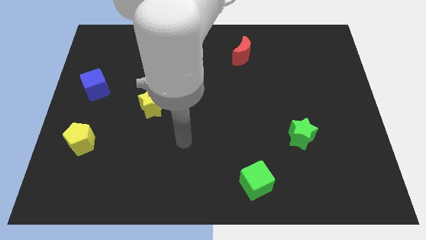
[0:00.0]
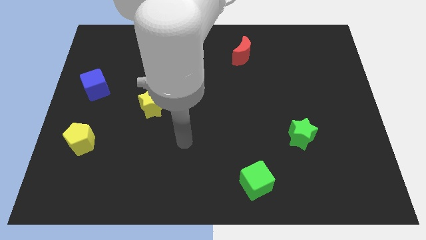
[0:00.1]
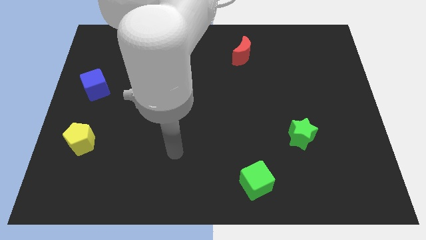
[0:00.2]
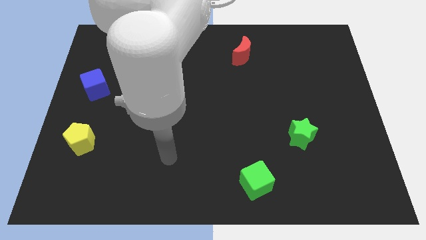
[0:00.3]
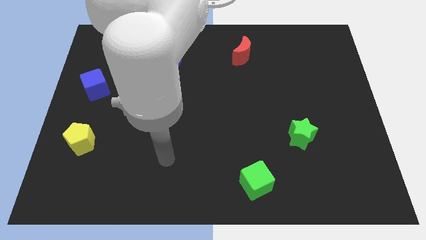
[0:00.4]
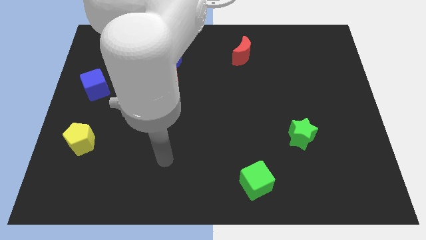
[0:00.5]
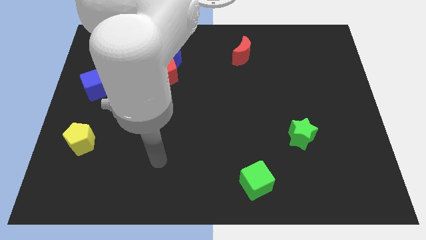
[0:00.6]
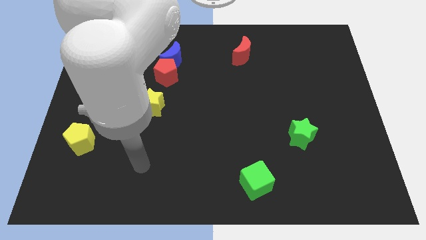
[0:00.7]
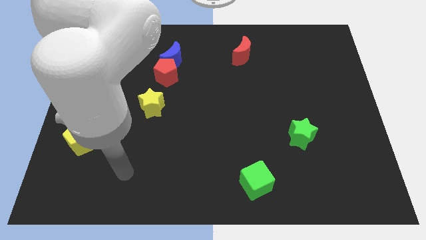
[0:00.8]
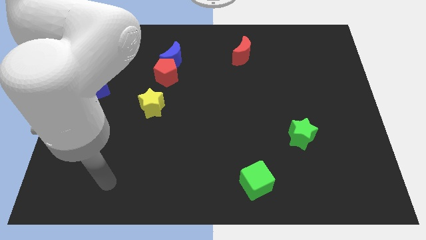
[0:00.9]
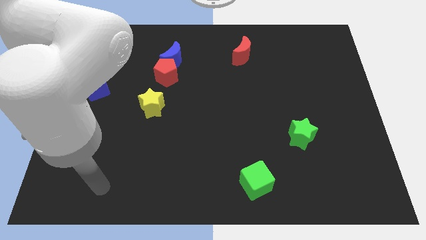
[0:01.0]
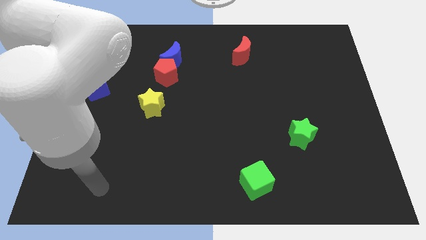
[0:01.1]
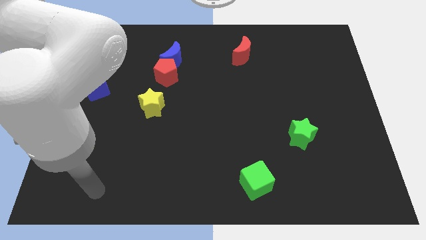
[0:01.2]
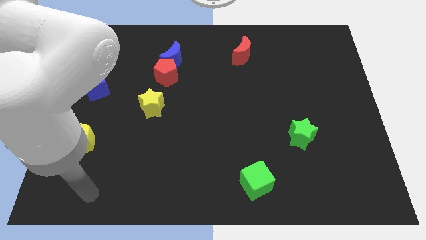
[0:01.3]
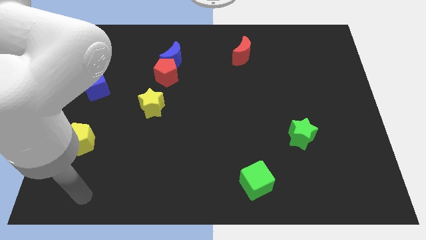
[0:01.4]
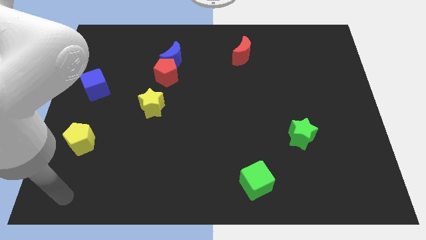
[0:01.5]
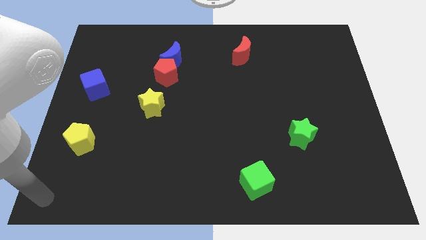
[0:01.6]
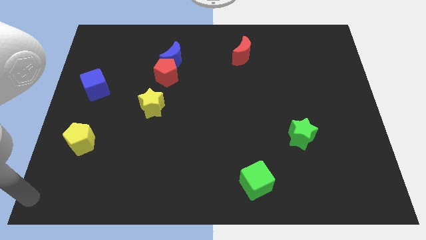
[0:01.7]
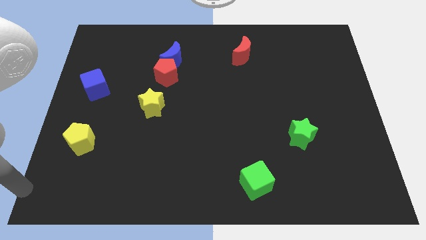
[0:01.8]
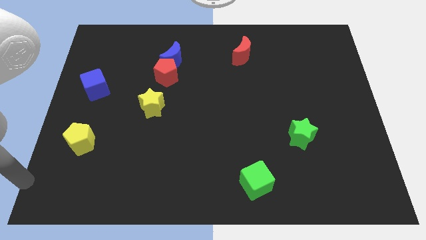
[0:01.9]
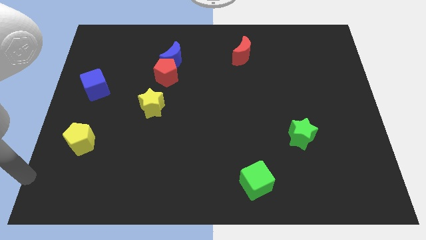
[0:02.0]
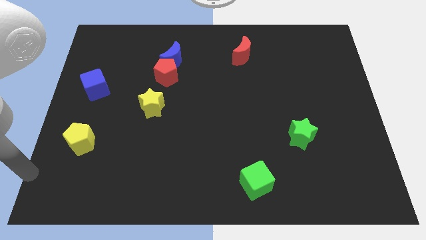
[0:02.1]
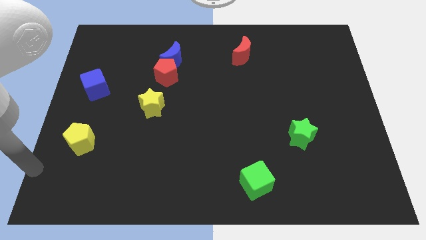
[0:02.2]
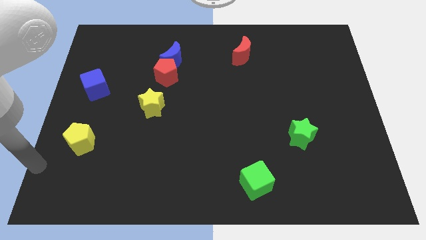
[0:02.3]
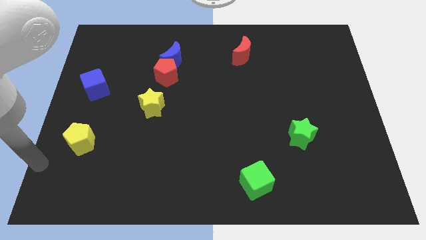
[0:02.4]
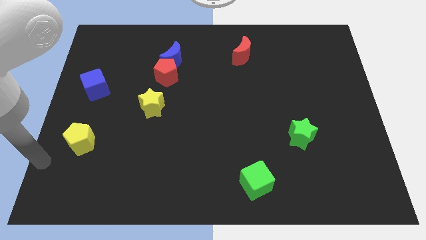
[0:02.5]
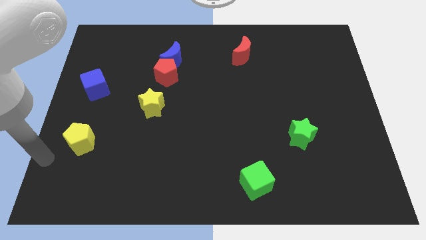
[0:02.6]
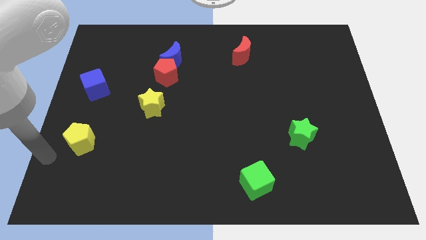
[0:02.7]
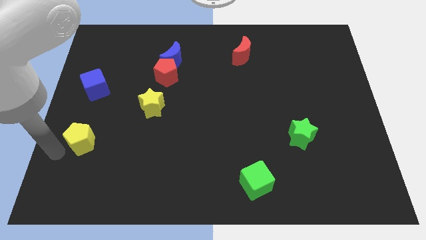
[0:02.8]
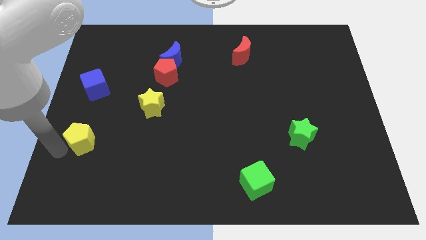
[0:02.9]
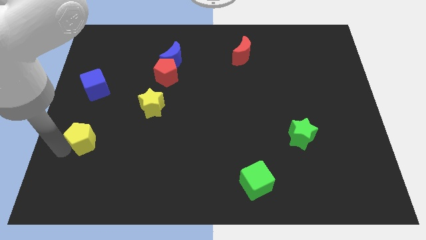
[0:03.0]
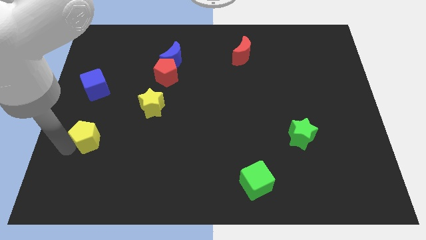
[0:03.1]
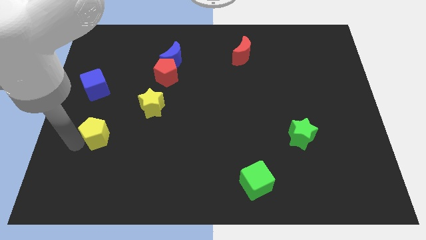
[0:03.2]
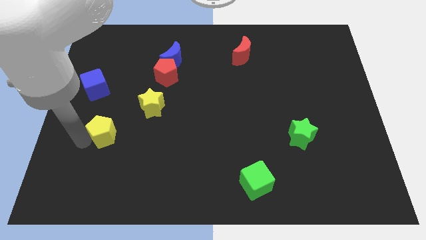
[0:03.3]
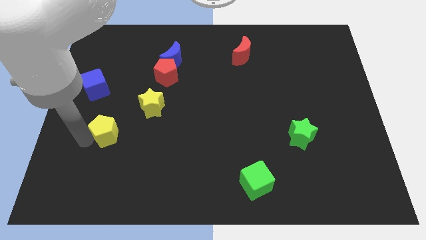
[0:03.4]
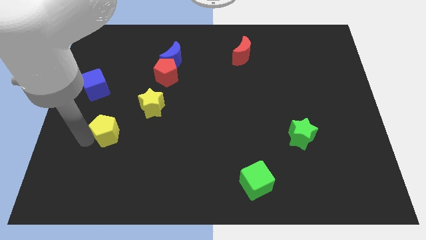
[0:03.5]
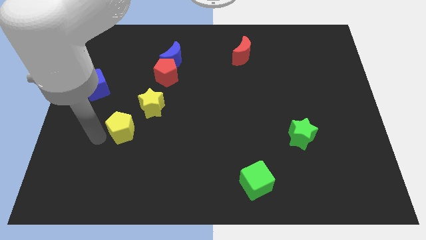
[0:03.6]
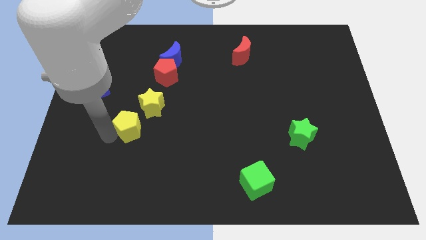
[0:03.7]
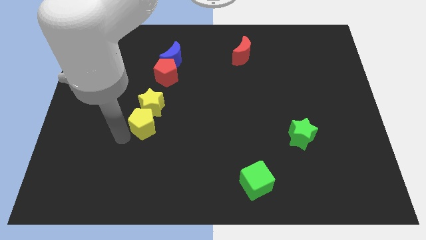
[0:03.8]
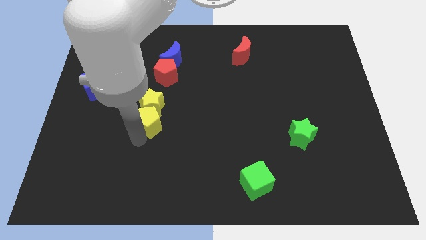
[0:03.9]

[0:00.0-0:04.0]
place the yellow pentagon at the bottom of the yellow star

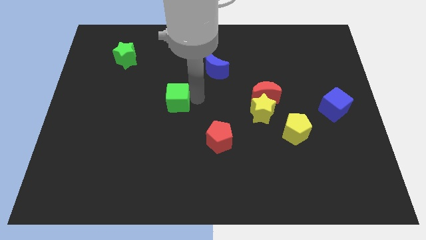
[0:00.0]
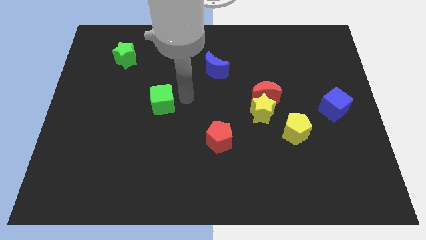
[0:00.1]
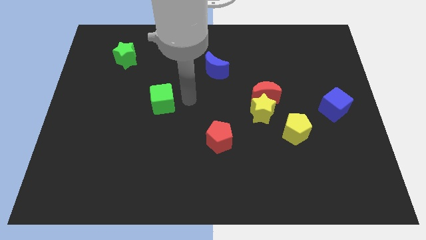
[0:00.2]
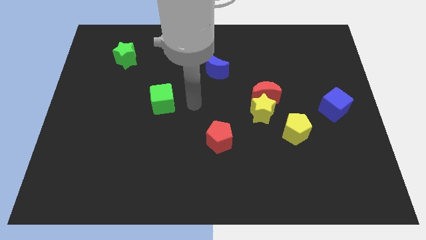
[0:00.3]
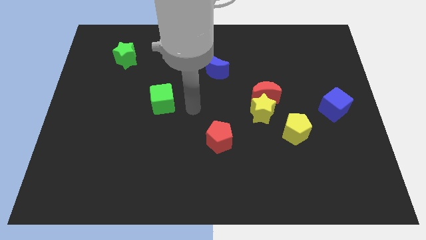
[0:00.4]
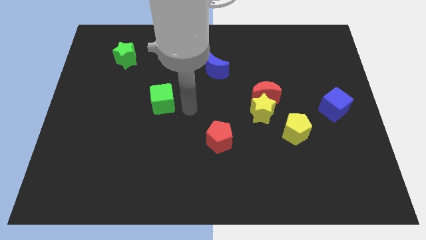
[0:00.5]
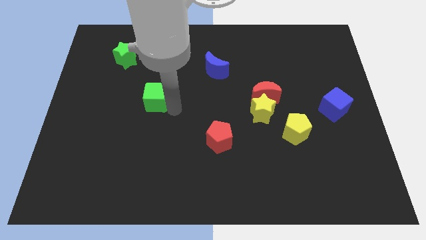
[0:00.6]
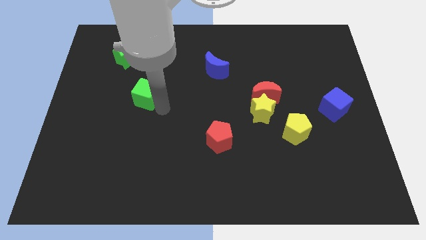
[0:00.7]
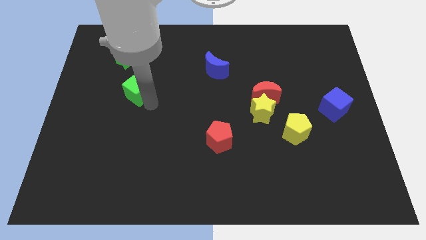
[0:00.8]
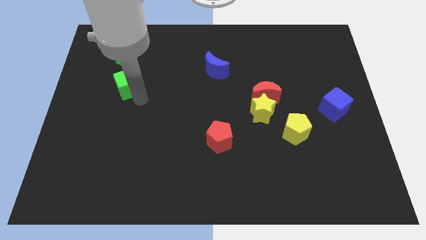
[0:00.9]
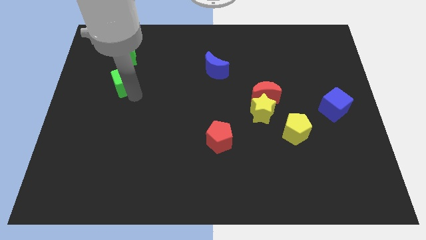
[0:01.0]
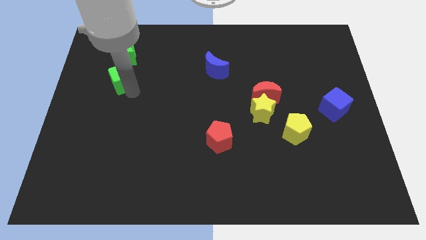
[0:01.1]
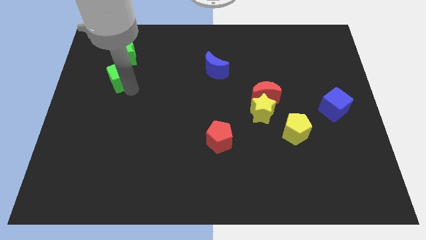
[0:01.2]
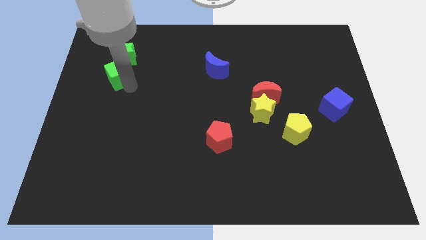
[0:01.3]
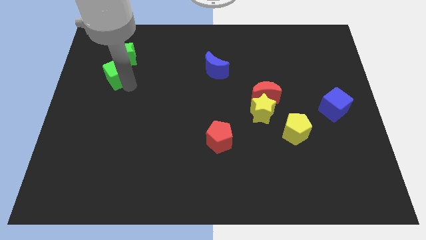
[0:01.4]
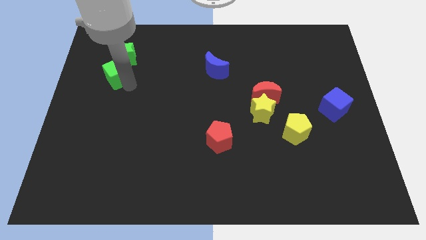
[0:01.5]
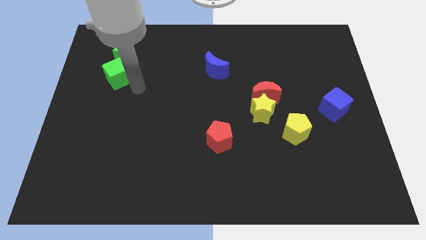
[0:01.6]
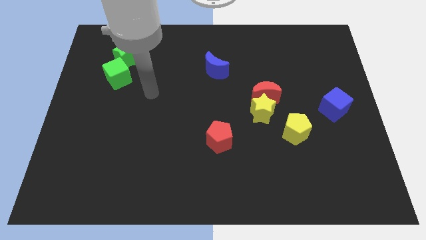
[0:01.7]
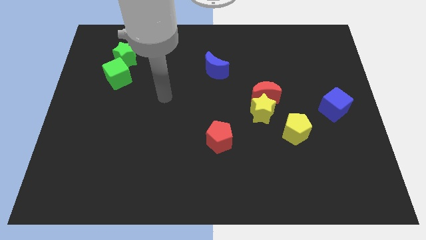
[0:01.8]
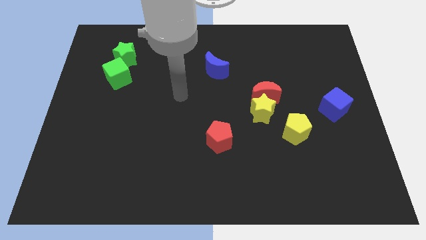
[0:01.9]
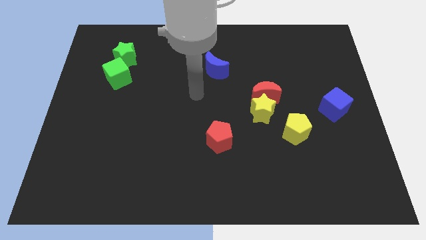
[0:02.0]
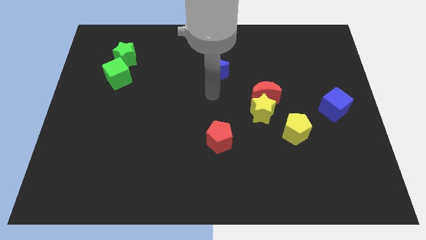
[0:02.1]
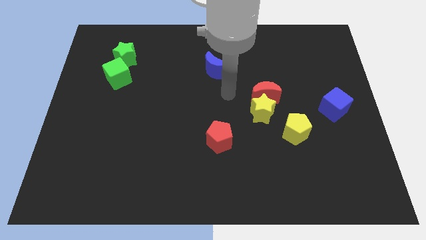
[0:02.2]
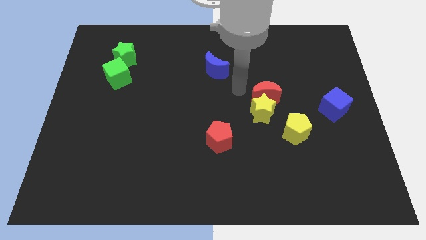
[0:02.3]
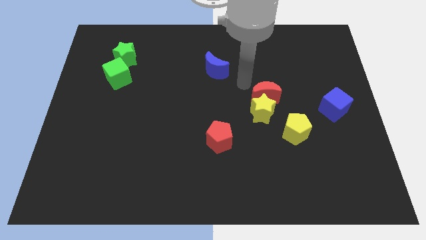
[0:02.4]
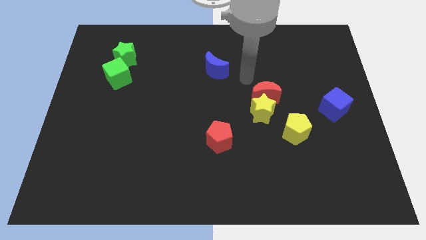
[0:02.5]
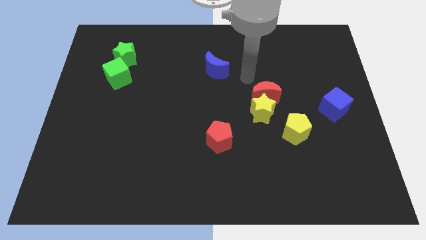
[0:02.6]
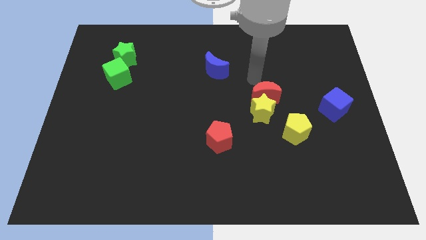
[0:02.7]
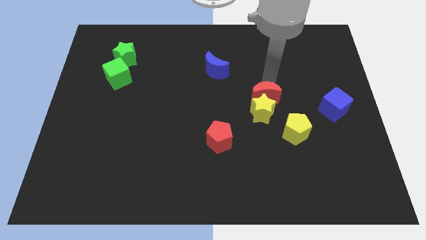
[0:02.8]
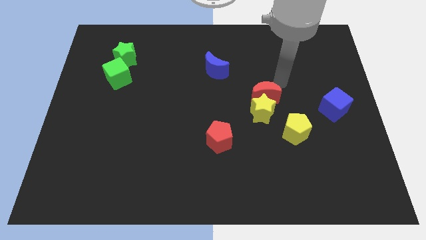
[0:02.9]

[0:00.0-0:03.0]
place the arm above the red moon

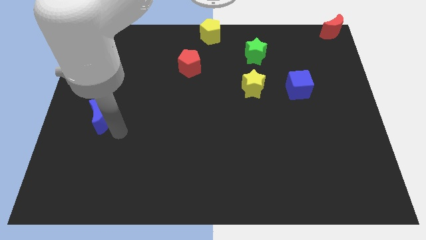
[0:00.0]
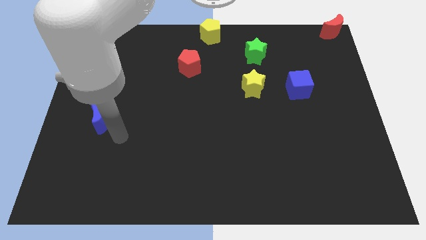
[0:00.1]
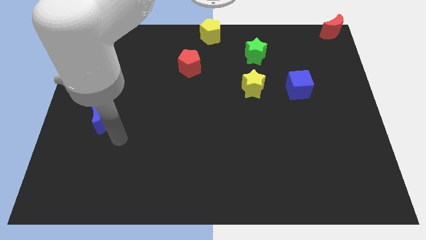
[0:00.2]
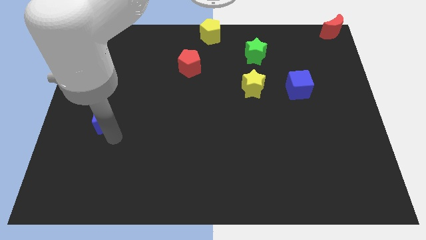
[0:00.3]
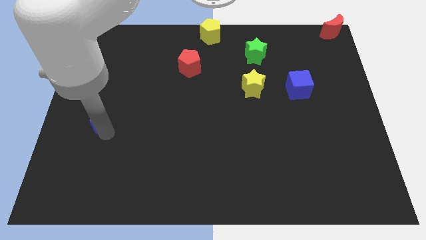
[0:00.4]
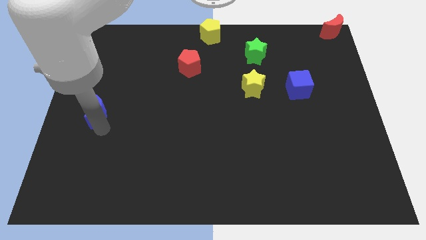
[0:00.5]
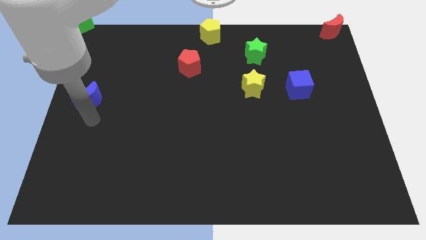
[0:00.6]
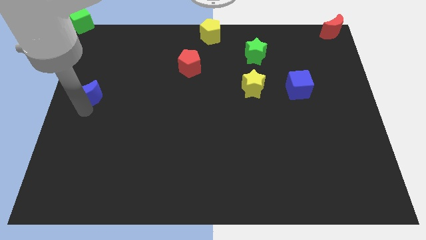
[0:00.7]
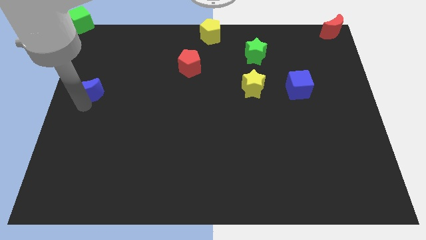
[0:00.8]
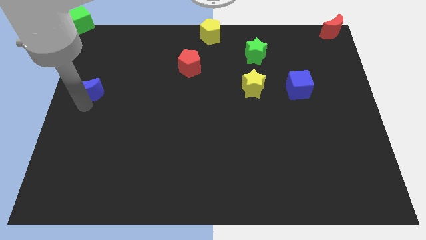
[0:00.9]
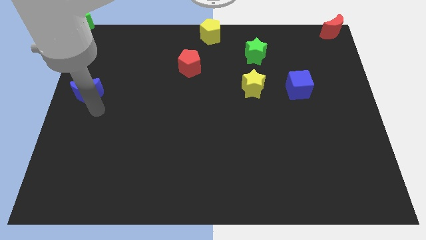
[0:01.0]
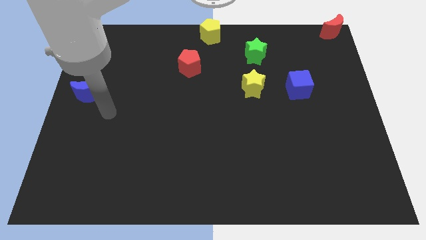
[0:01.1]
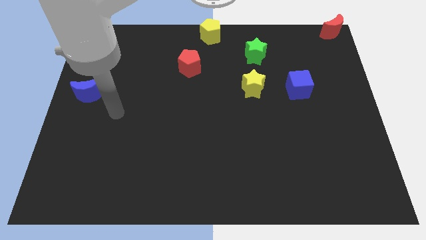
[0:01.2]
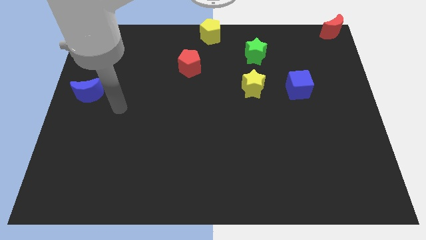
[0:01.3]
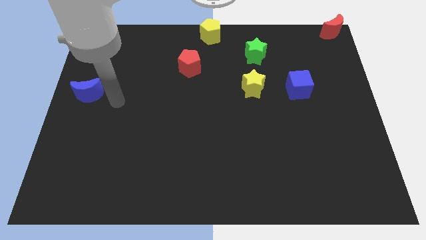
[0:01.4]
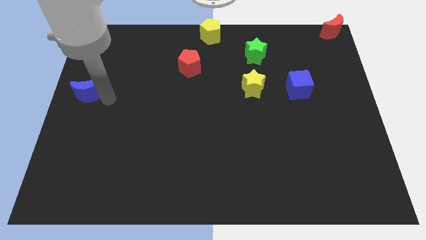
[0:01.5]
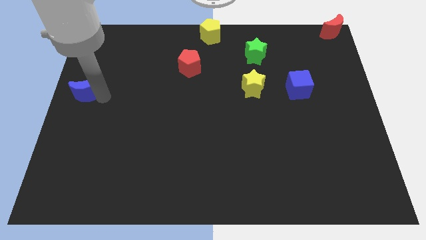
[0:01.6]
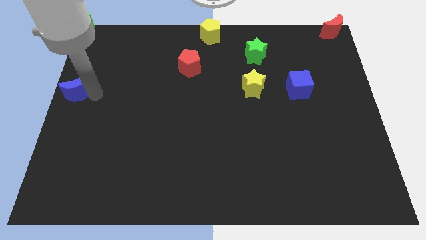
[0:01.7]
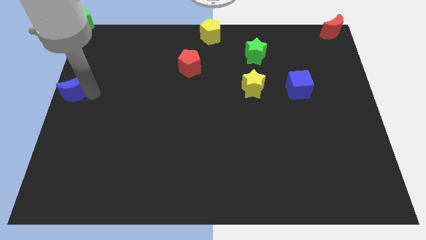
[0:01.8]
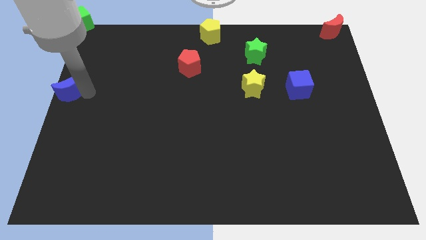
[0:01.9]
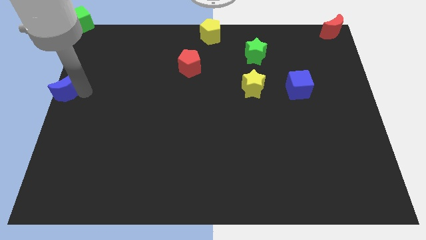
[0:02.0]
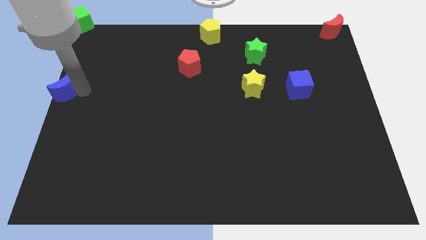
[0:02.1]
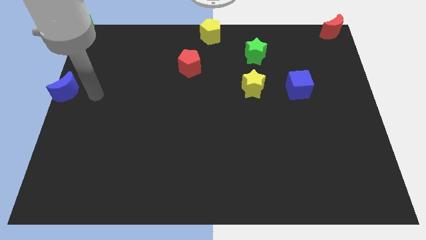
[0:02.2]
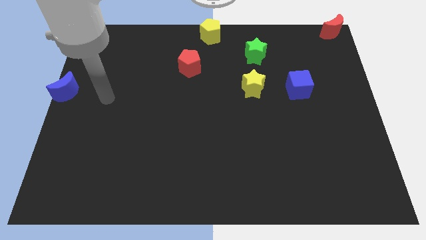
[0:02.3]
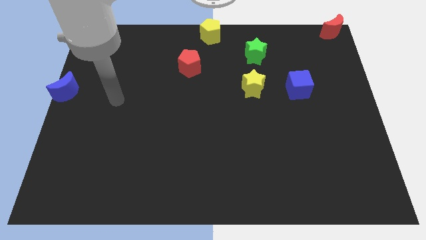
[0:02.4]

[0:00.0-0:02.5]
push the blue crescent towards the left center of the board
